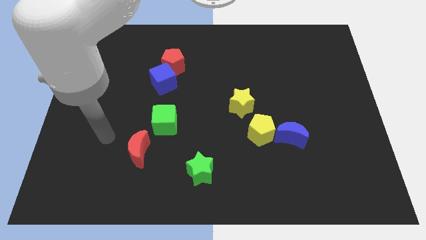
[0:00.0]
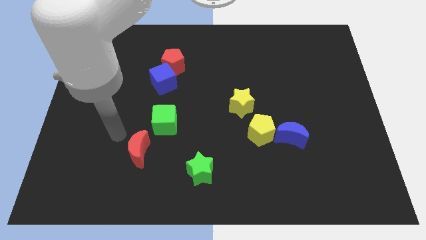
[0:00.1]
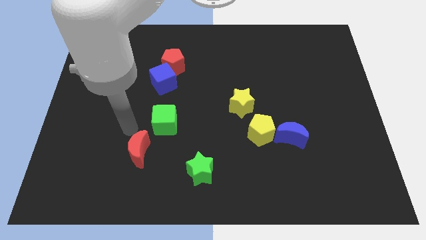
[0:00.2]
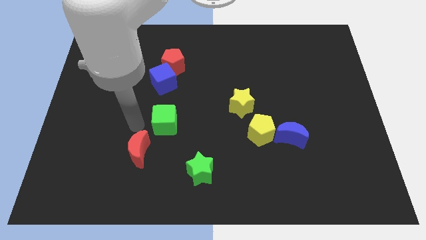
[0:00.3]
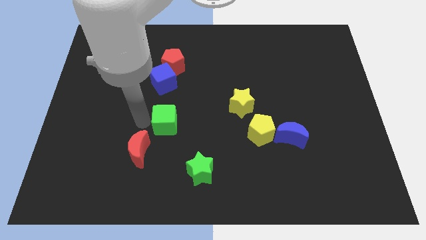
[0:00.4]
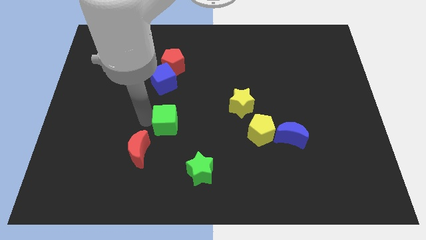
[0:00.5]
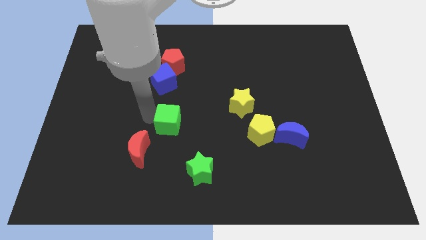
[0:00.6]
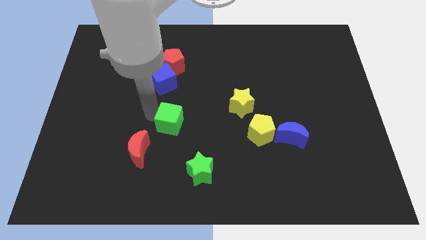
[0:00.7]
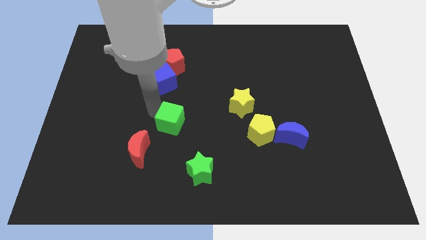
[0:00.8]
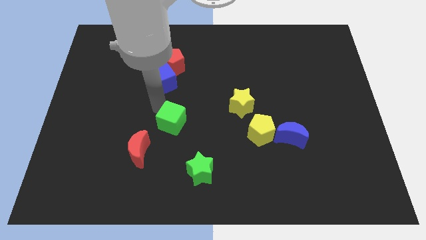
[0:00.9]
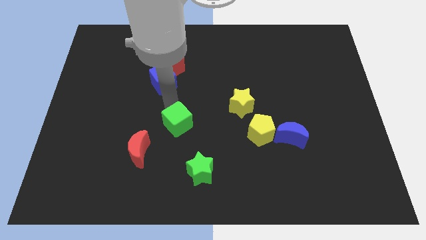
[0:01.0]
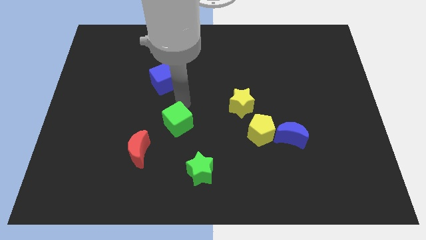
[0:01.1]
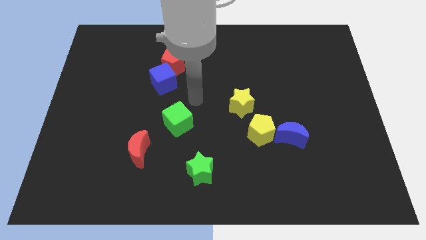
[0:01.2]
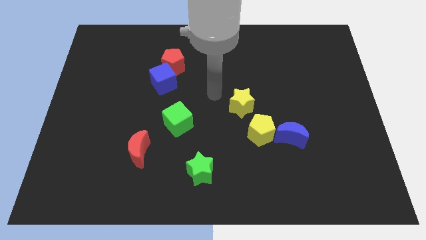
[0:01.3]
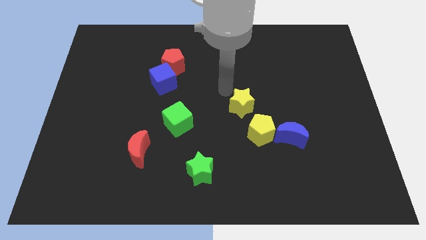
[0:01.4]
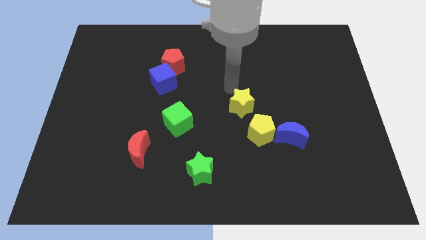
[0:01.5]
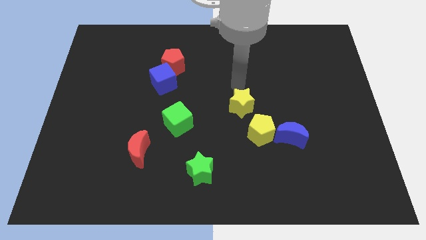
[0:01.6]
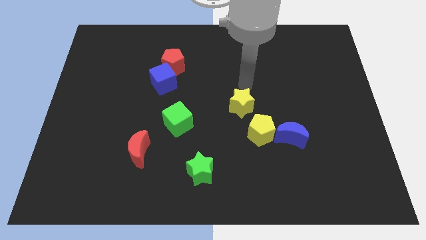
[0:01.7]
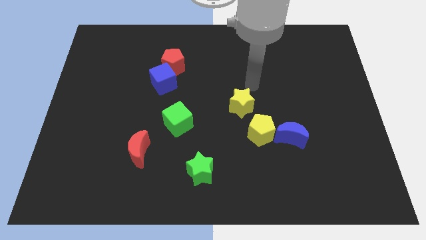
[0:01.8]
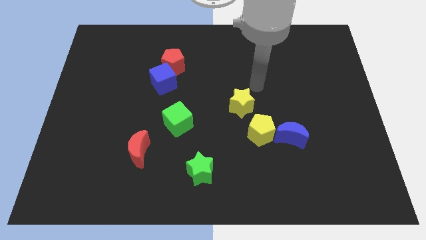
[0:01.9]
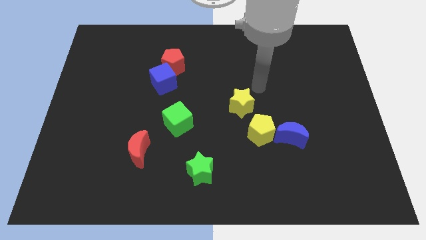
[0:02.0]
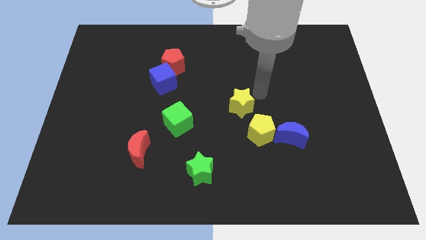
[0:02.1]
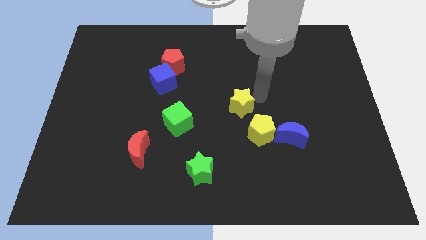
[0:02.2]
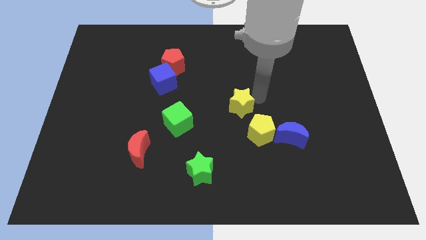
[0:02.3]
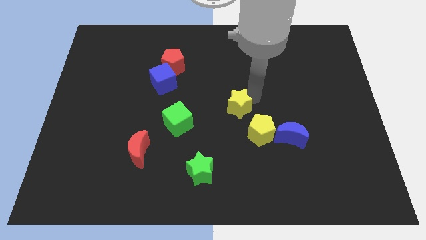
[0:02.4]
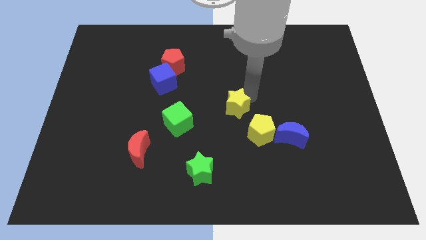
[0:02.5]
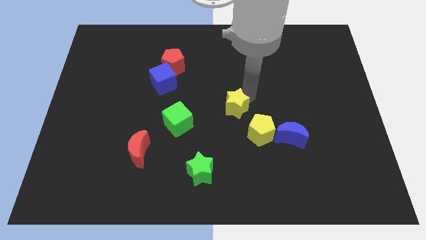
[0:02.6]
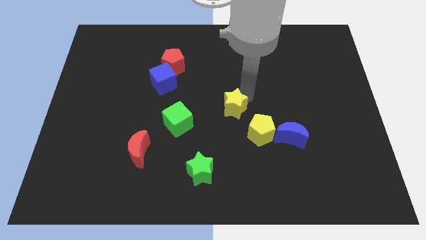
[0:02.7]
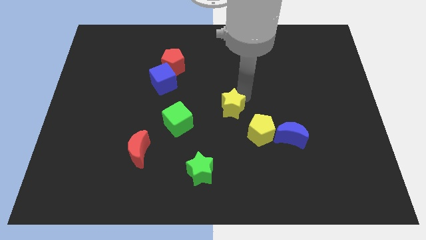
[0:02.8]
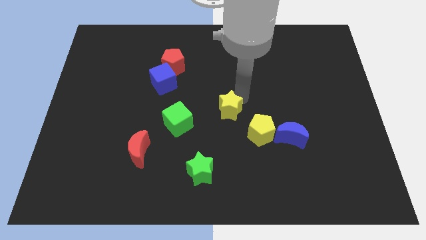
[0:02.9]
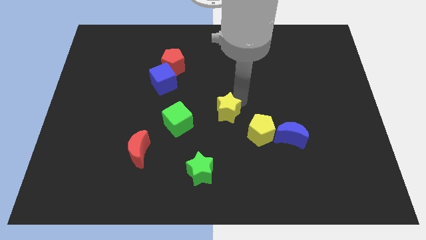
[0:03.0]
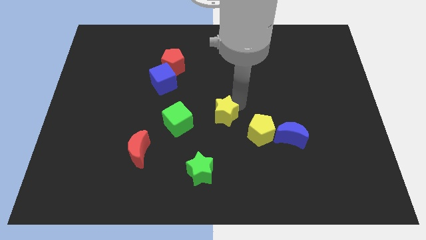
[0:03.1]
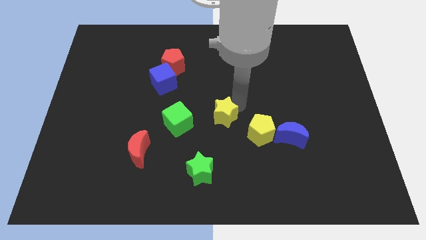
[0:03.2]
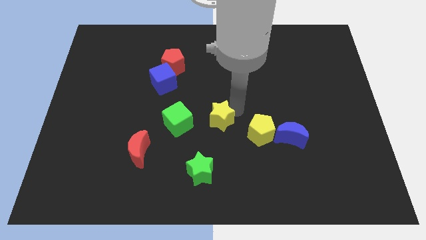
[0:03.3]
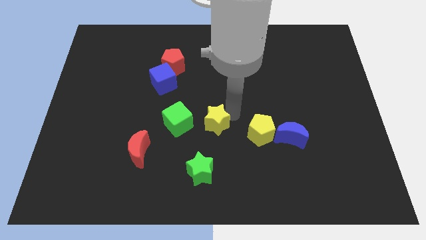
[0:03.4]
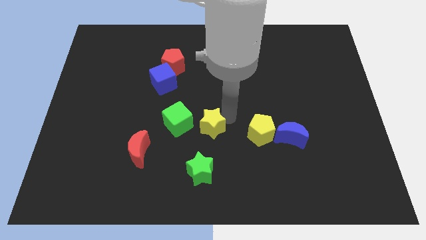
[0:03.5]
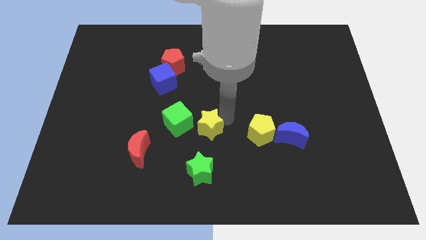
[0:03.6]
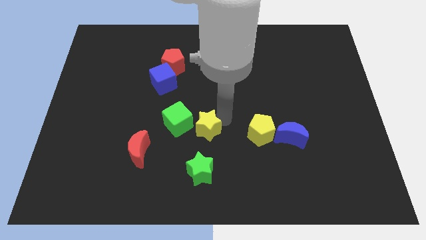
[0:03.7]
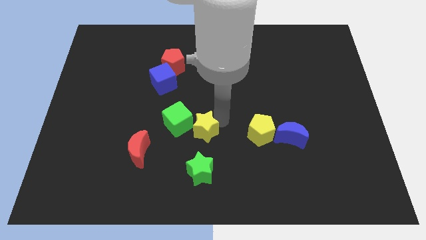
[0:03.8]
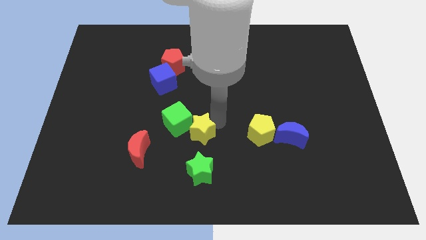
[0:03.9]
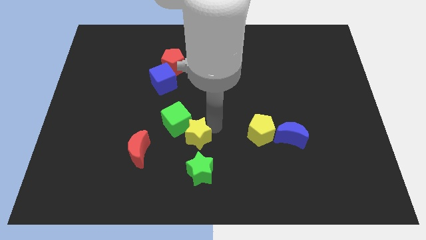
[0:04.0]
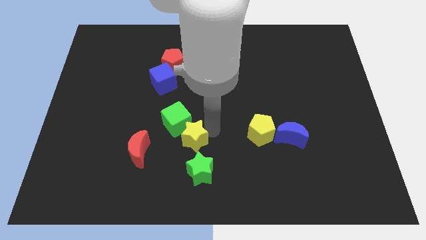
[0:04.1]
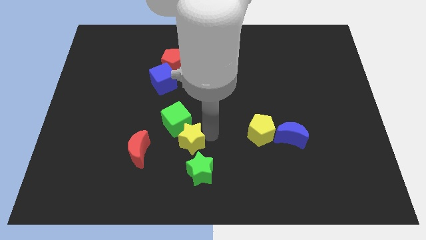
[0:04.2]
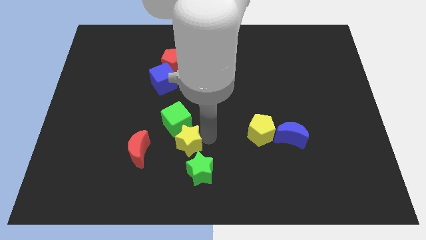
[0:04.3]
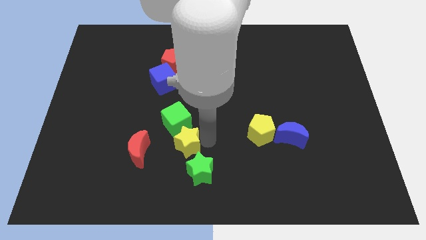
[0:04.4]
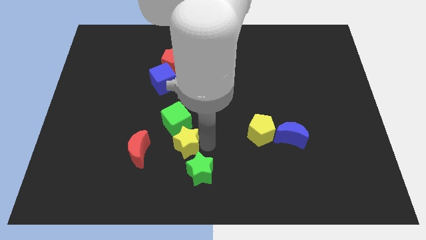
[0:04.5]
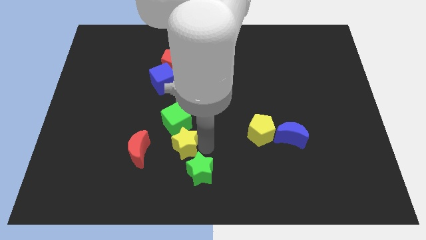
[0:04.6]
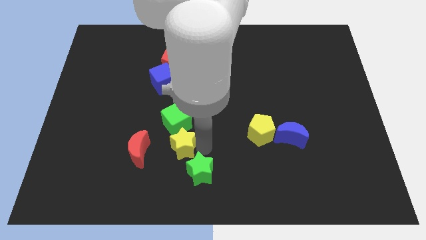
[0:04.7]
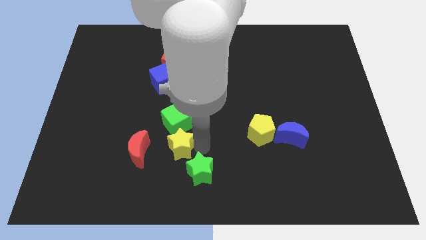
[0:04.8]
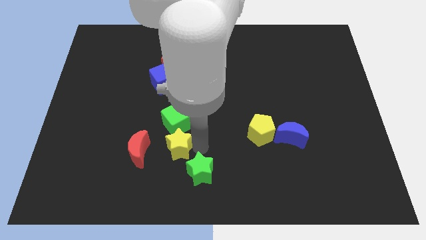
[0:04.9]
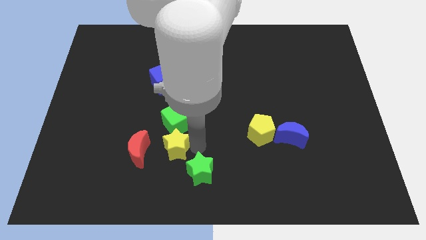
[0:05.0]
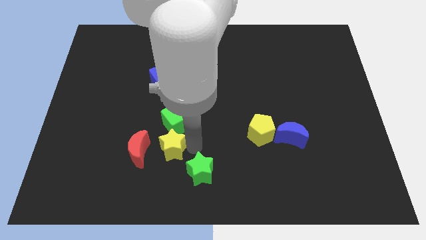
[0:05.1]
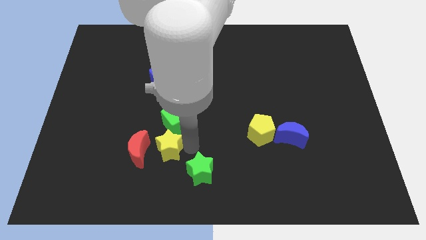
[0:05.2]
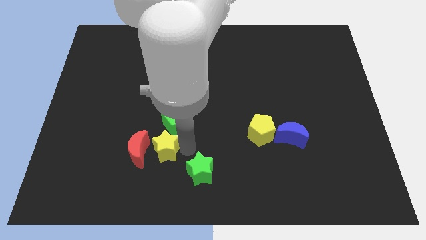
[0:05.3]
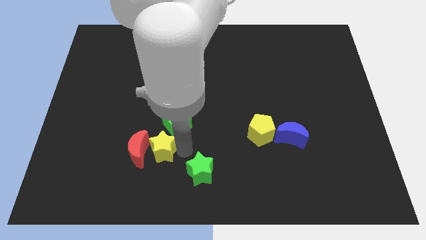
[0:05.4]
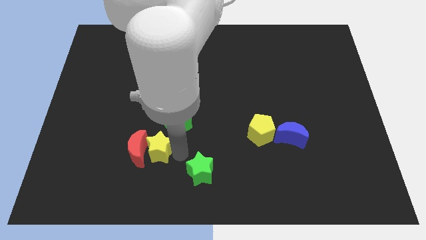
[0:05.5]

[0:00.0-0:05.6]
move the yellow star close to the red moon

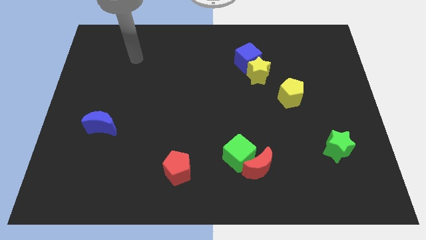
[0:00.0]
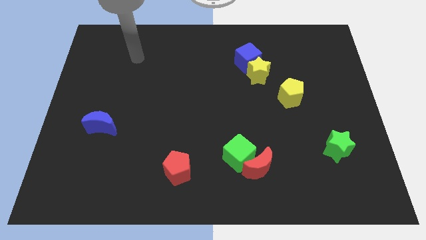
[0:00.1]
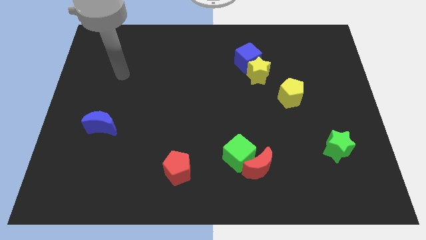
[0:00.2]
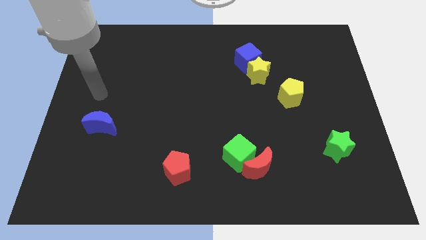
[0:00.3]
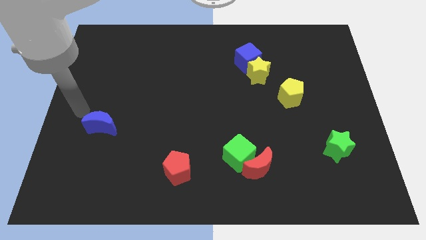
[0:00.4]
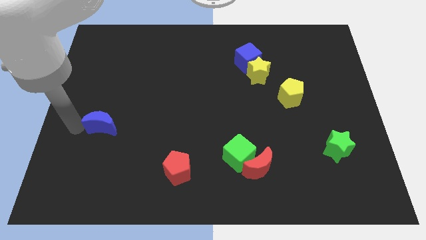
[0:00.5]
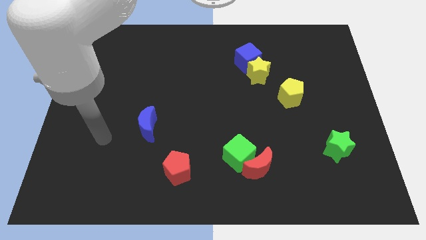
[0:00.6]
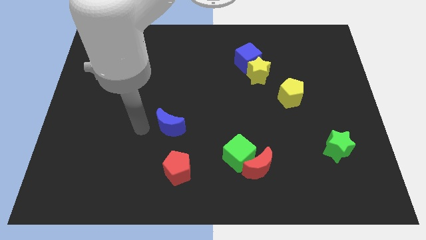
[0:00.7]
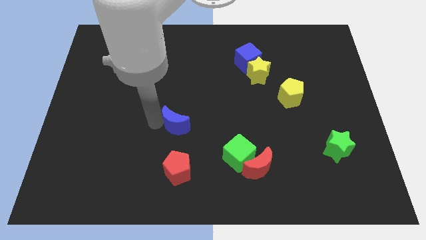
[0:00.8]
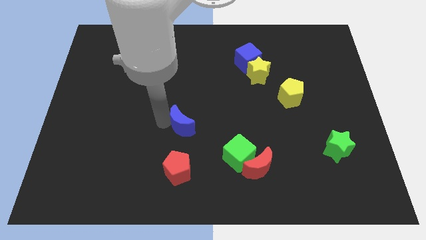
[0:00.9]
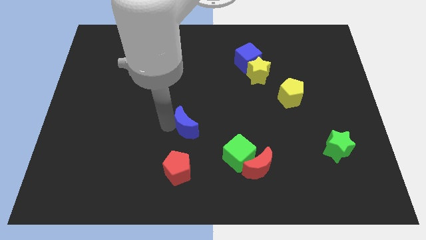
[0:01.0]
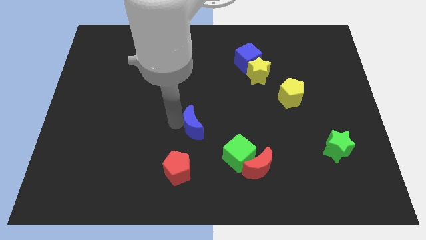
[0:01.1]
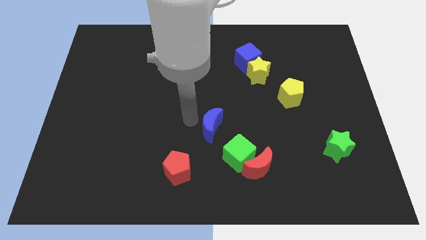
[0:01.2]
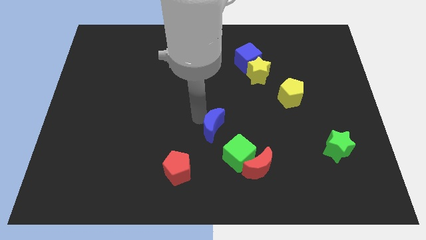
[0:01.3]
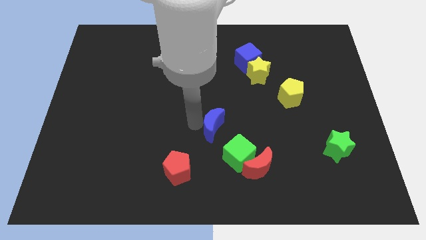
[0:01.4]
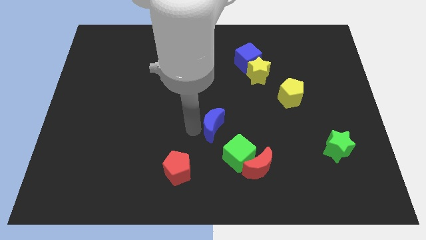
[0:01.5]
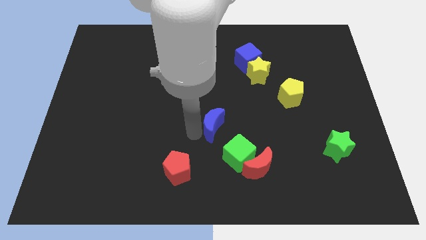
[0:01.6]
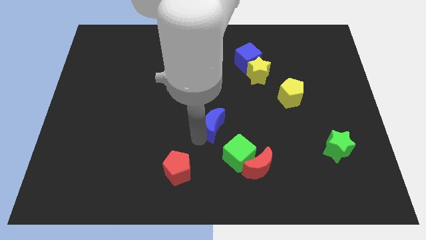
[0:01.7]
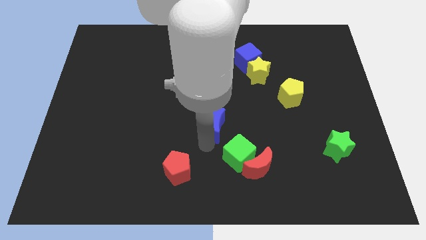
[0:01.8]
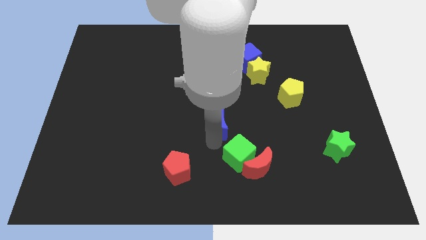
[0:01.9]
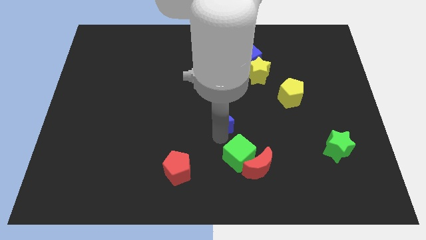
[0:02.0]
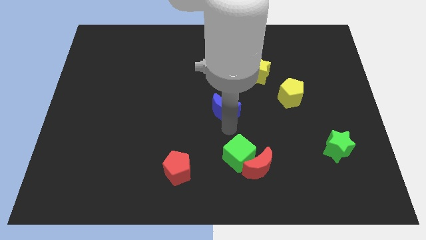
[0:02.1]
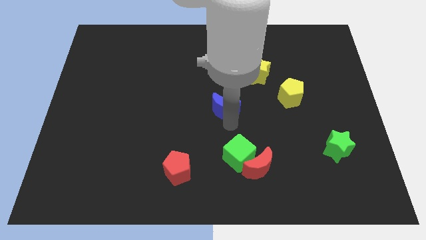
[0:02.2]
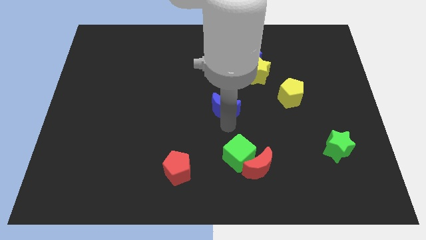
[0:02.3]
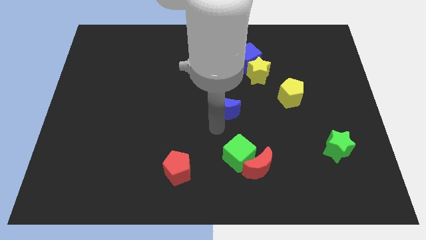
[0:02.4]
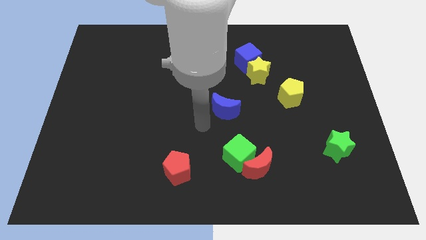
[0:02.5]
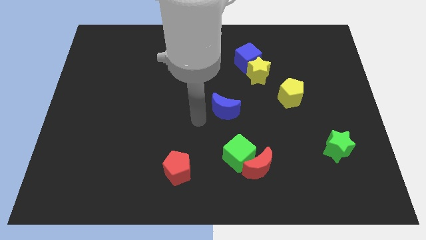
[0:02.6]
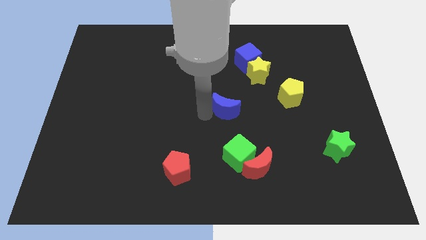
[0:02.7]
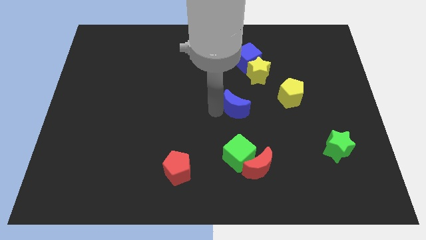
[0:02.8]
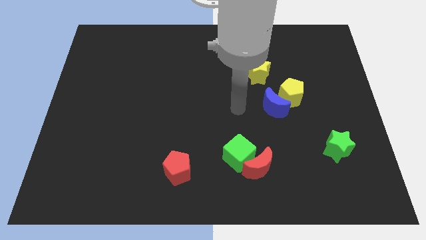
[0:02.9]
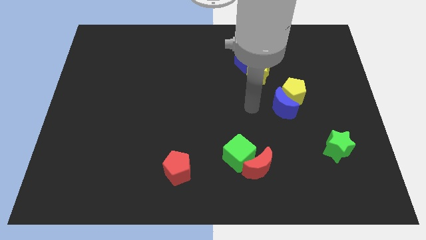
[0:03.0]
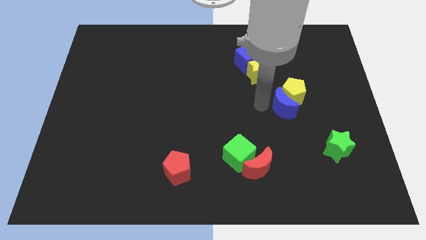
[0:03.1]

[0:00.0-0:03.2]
move the blue moon to the yellow pentagon
